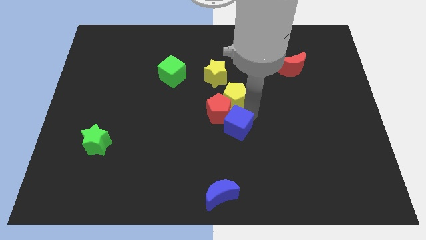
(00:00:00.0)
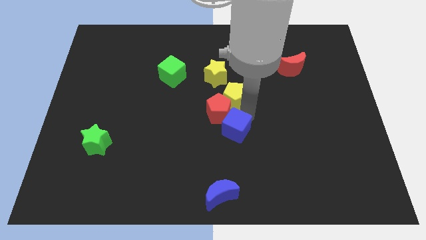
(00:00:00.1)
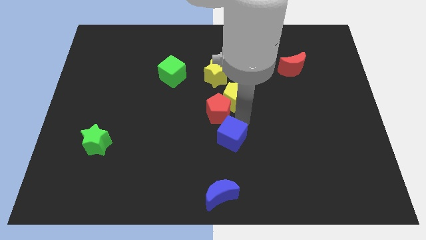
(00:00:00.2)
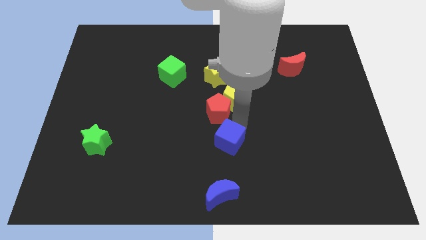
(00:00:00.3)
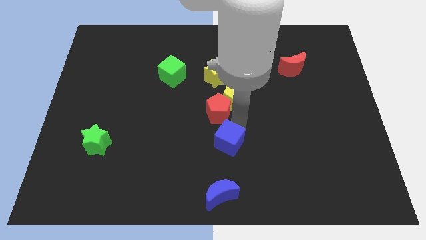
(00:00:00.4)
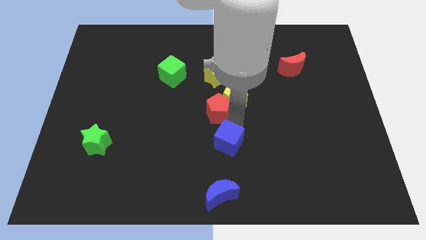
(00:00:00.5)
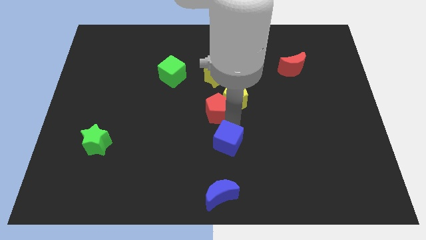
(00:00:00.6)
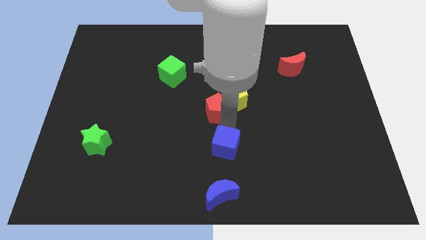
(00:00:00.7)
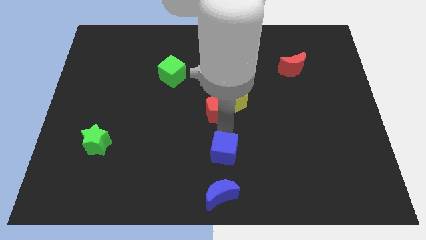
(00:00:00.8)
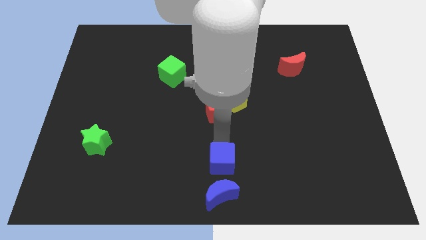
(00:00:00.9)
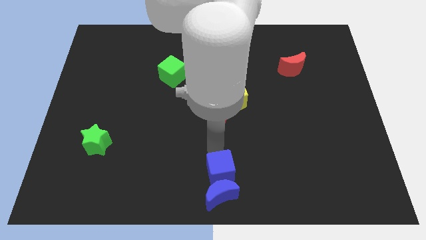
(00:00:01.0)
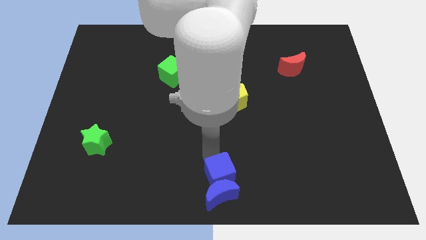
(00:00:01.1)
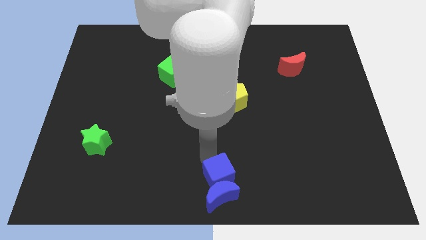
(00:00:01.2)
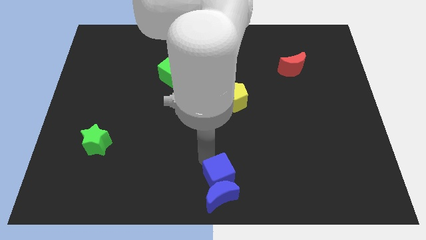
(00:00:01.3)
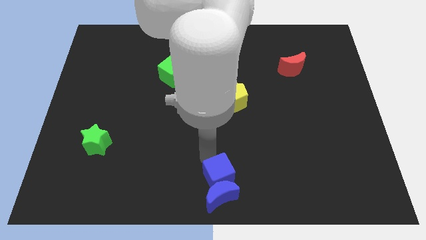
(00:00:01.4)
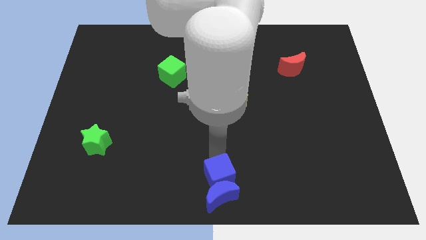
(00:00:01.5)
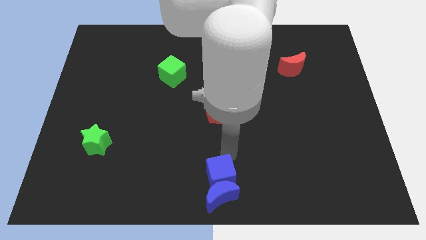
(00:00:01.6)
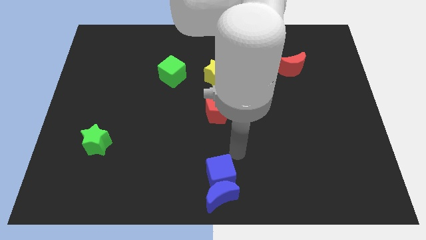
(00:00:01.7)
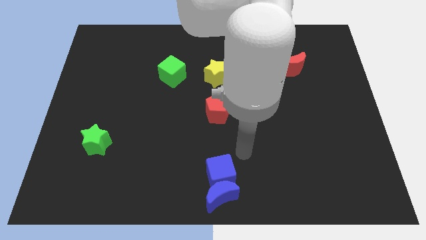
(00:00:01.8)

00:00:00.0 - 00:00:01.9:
place blue cube above blue crescent

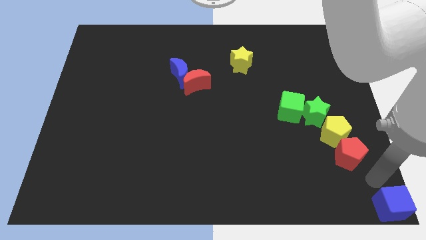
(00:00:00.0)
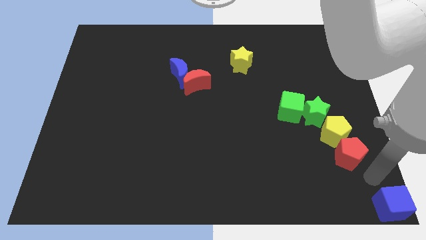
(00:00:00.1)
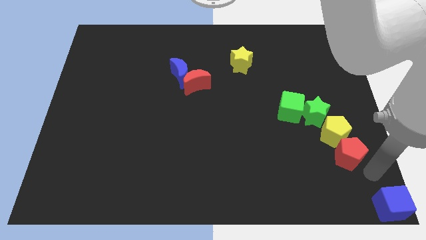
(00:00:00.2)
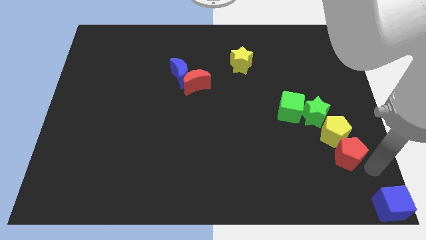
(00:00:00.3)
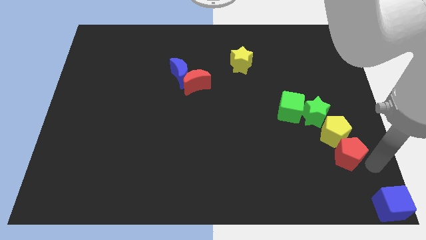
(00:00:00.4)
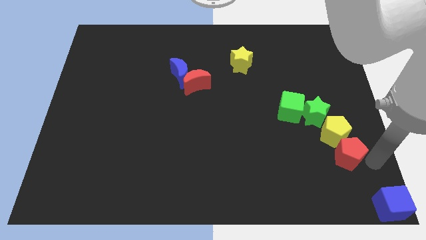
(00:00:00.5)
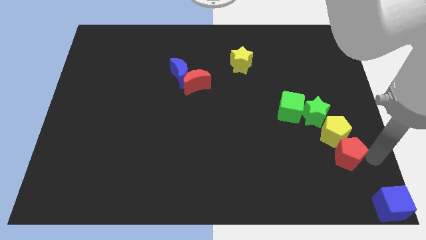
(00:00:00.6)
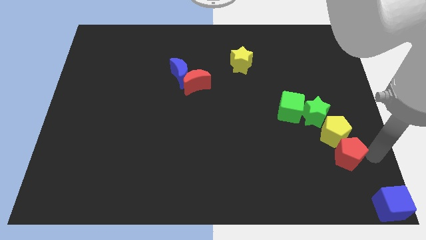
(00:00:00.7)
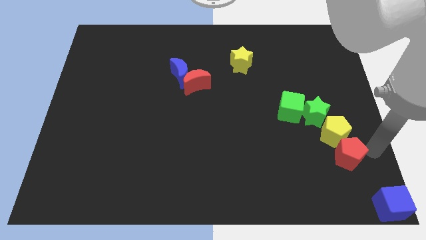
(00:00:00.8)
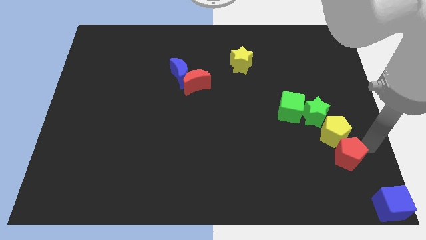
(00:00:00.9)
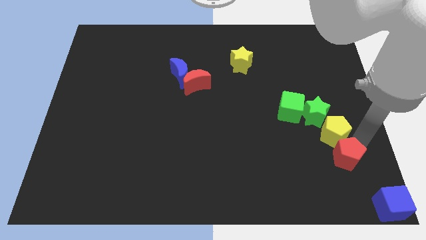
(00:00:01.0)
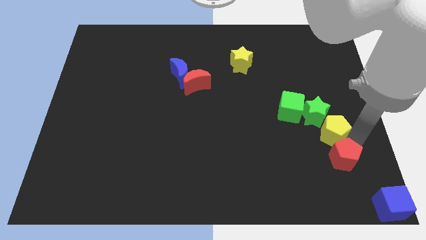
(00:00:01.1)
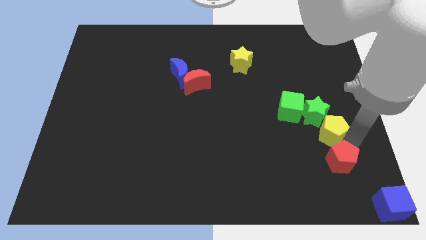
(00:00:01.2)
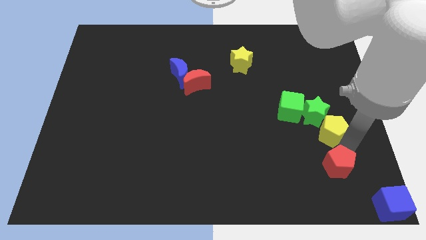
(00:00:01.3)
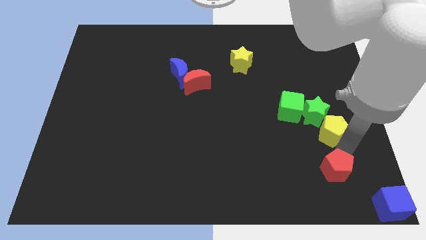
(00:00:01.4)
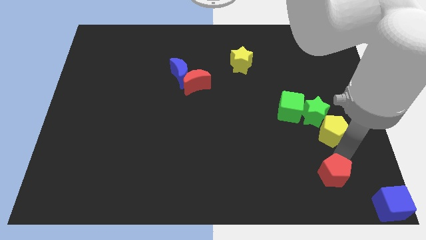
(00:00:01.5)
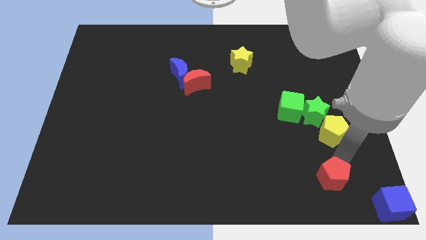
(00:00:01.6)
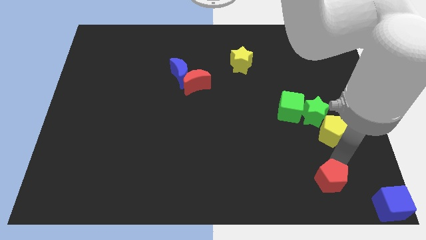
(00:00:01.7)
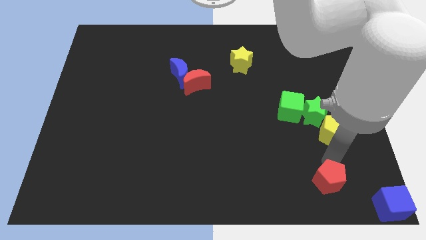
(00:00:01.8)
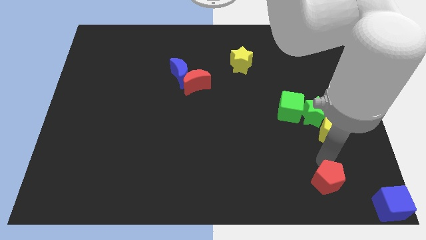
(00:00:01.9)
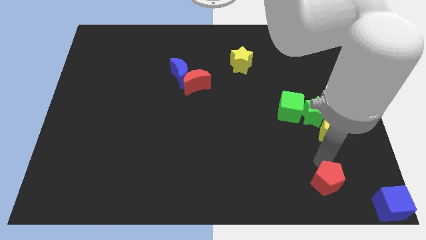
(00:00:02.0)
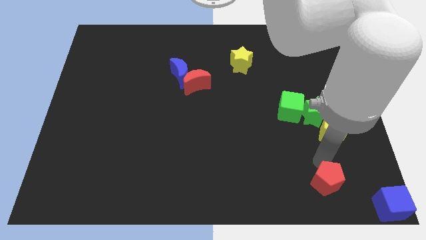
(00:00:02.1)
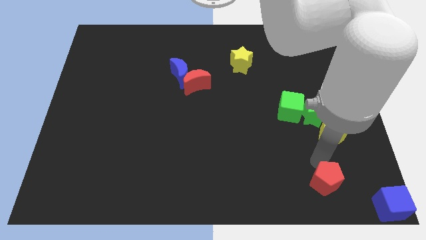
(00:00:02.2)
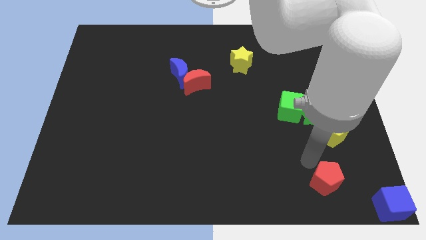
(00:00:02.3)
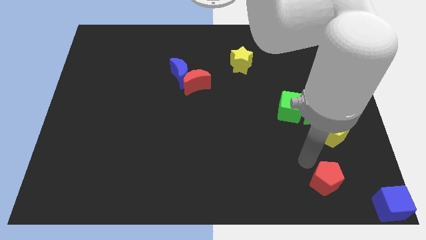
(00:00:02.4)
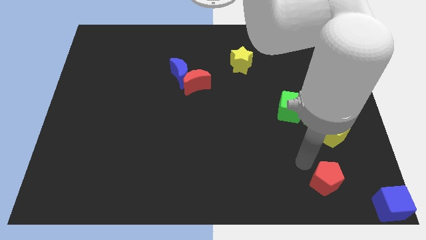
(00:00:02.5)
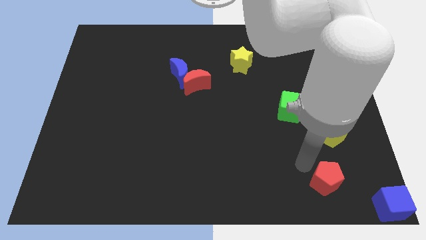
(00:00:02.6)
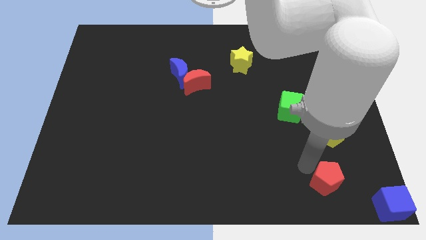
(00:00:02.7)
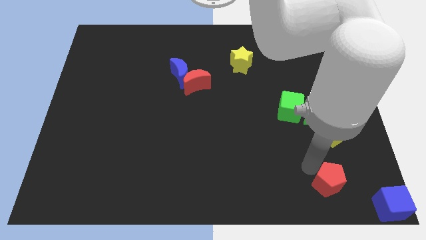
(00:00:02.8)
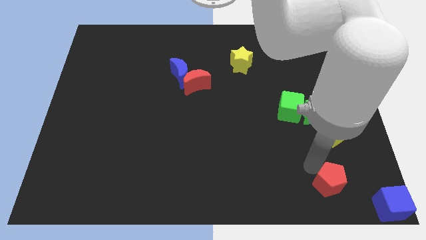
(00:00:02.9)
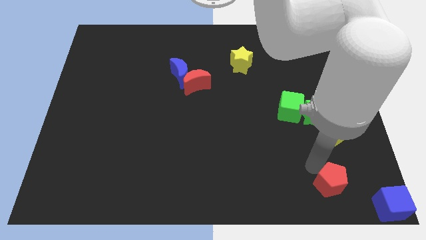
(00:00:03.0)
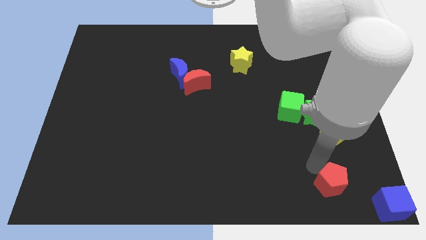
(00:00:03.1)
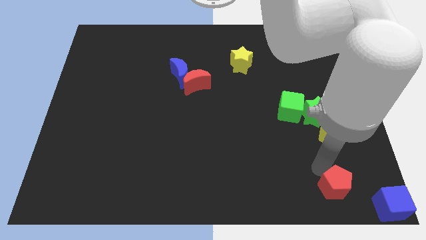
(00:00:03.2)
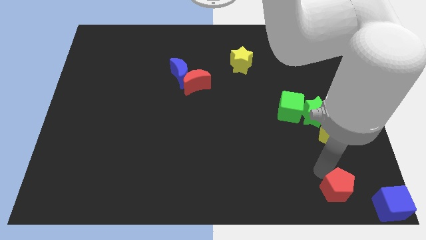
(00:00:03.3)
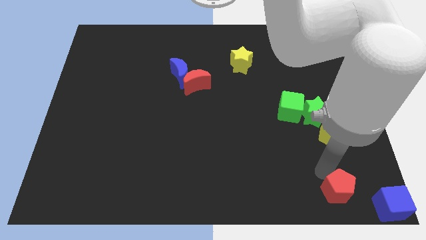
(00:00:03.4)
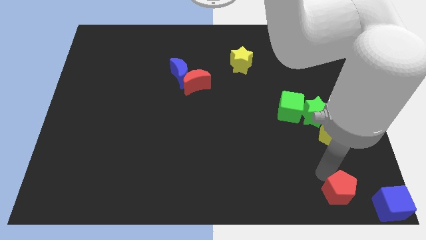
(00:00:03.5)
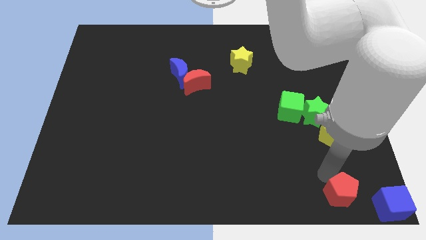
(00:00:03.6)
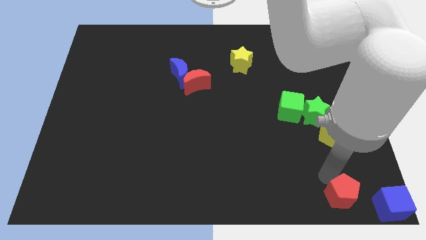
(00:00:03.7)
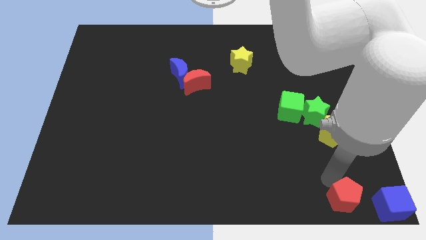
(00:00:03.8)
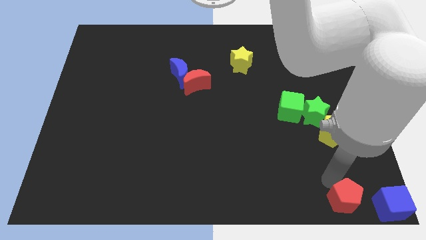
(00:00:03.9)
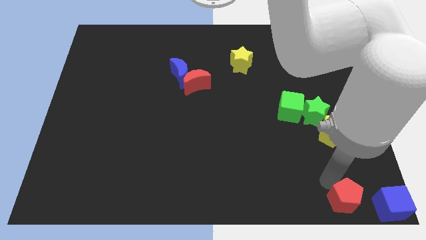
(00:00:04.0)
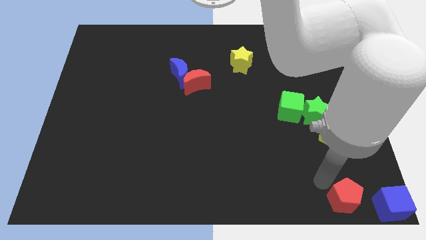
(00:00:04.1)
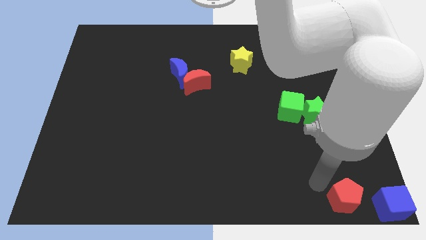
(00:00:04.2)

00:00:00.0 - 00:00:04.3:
separate the red pentagon from the yellow pentagon

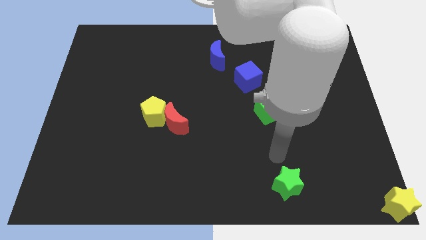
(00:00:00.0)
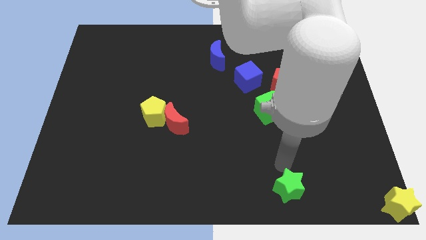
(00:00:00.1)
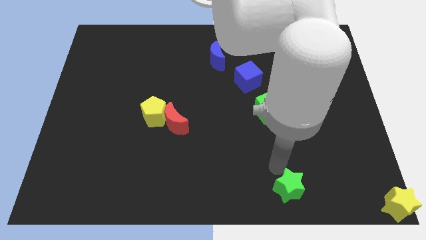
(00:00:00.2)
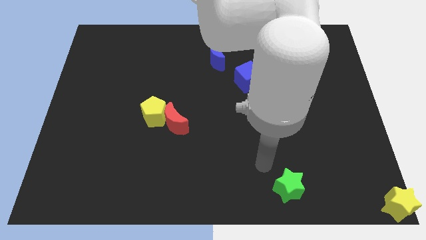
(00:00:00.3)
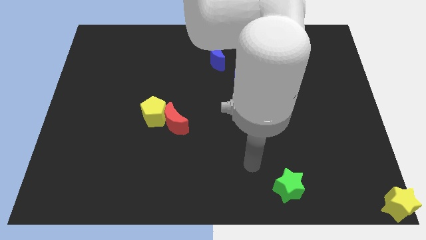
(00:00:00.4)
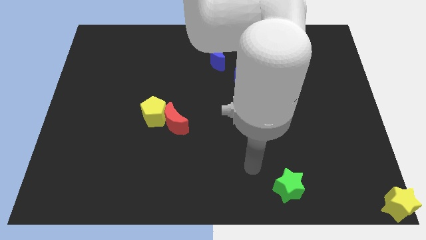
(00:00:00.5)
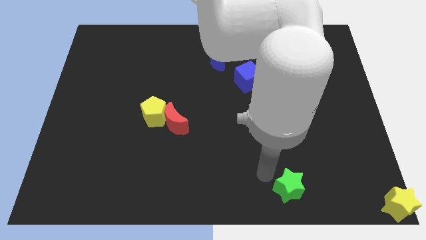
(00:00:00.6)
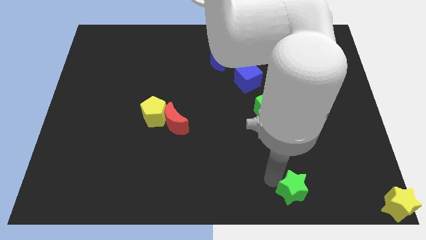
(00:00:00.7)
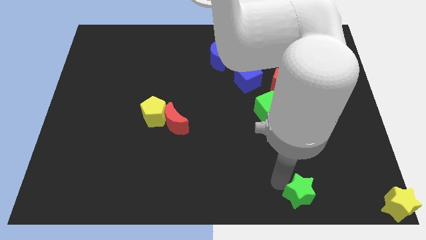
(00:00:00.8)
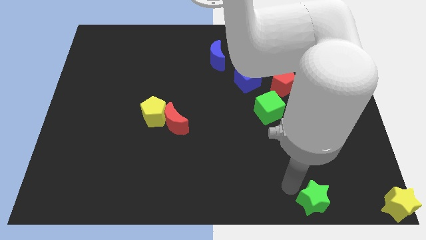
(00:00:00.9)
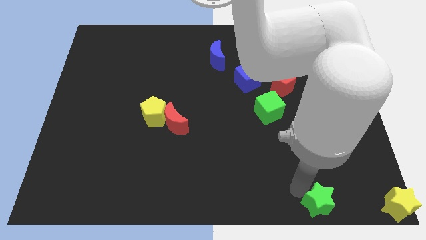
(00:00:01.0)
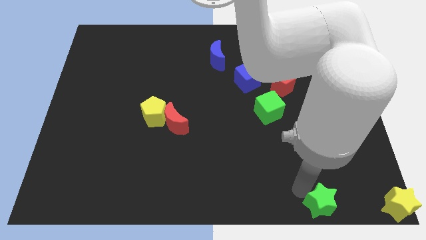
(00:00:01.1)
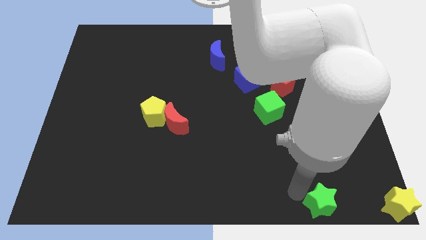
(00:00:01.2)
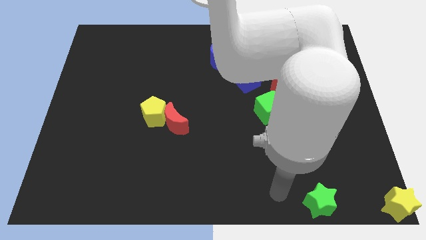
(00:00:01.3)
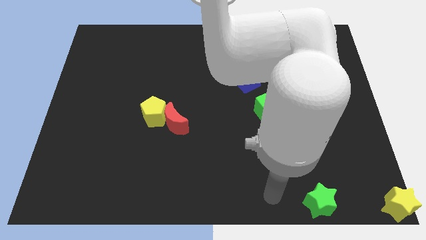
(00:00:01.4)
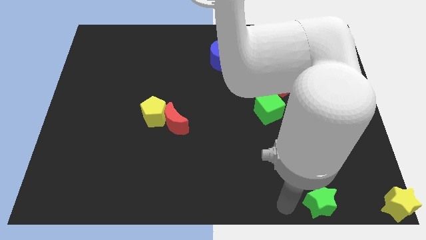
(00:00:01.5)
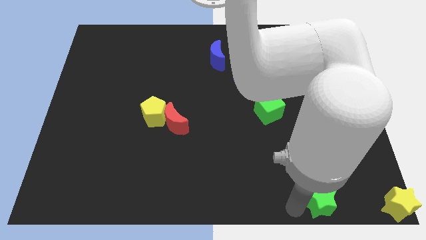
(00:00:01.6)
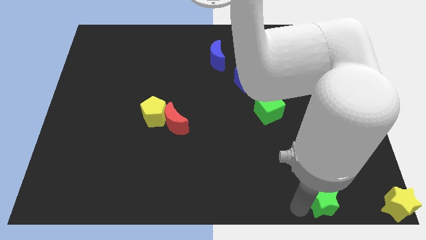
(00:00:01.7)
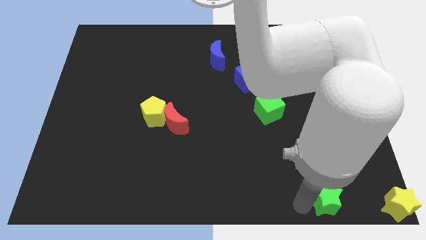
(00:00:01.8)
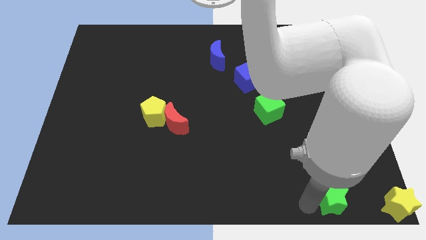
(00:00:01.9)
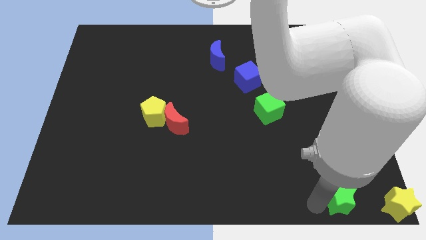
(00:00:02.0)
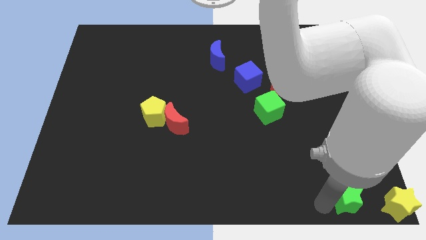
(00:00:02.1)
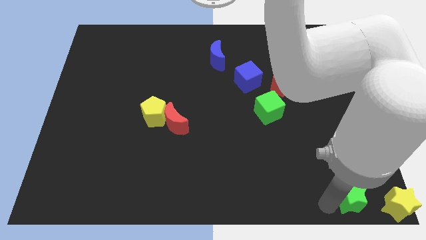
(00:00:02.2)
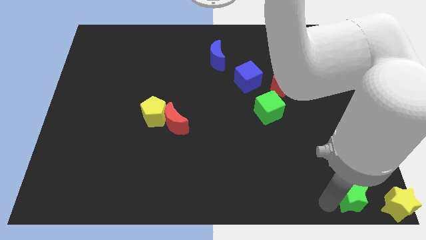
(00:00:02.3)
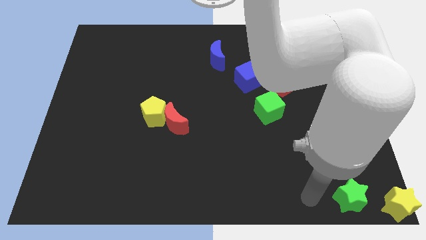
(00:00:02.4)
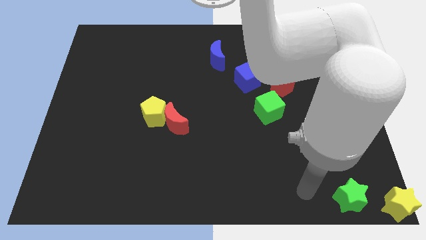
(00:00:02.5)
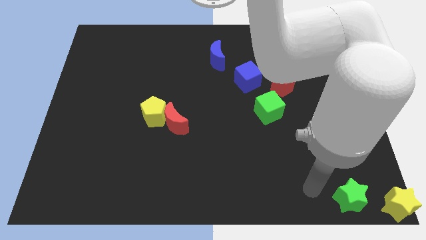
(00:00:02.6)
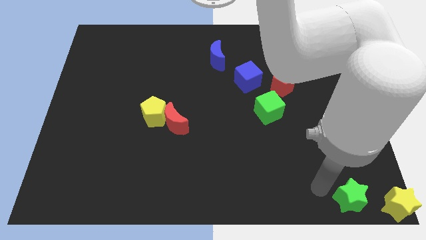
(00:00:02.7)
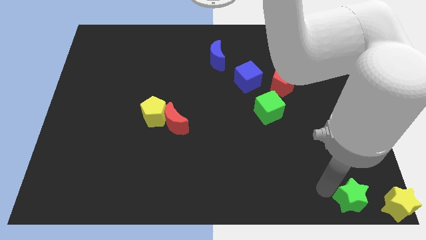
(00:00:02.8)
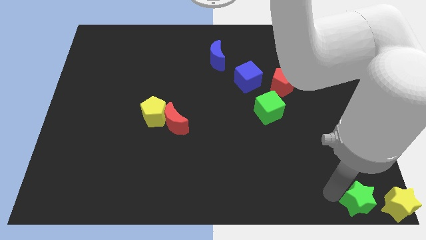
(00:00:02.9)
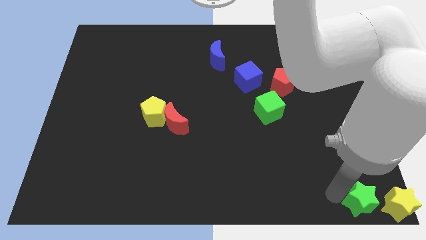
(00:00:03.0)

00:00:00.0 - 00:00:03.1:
push the green star towards the yellow star
